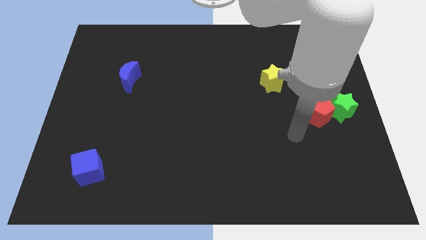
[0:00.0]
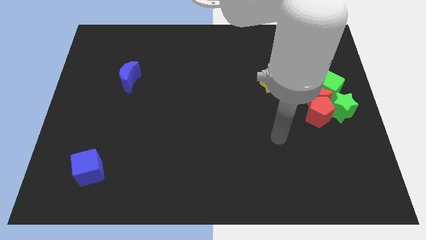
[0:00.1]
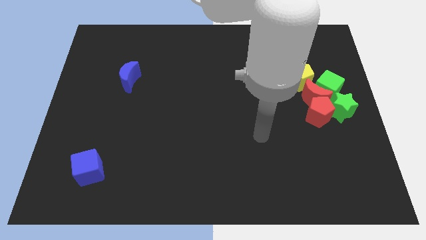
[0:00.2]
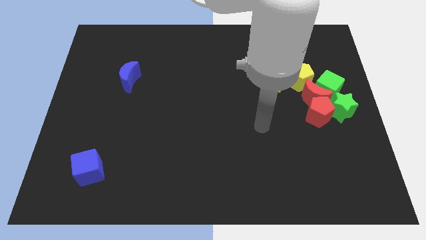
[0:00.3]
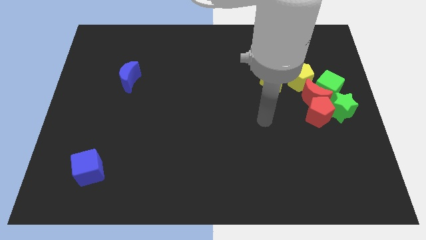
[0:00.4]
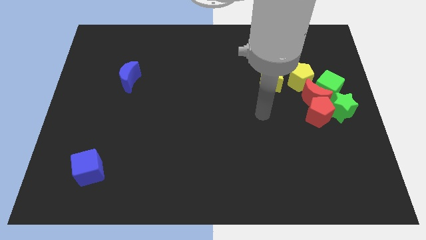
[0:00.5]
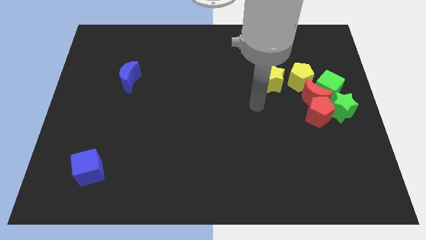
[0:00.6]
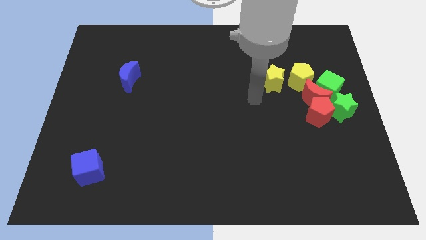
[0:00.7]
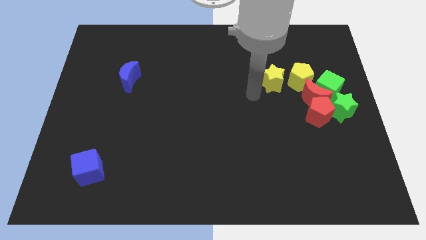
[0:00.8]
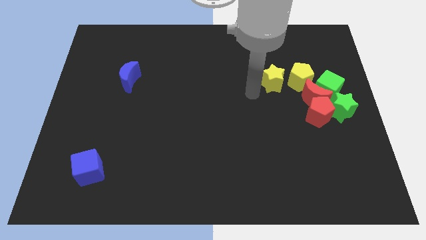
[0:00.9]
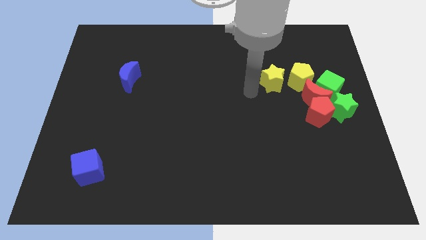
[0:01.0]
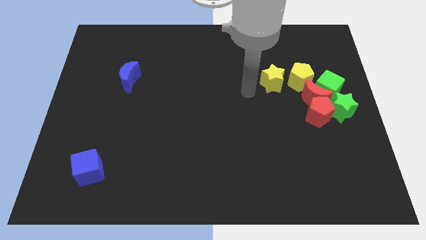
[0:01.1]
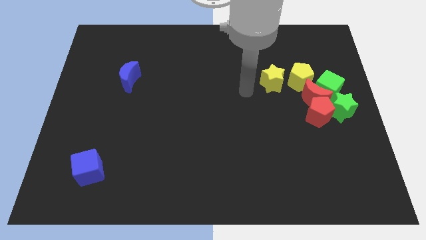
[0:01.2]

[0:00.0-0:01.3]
move your arm away from red pentagon

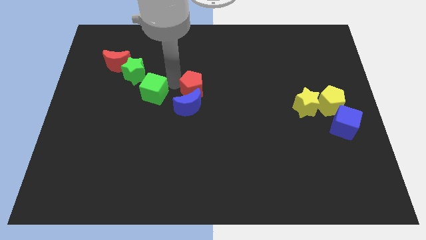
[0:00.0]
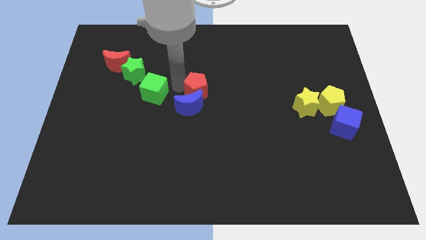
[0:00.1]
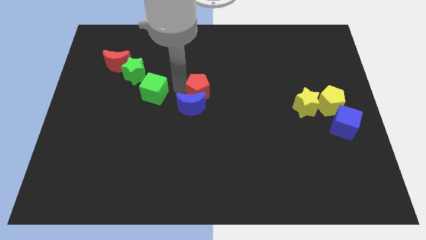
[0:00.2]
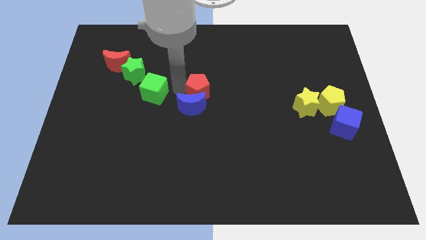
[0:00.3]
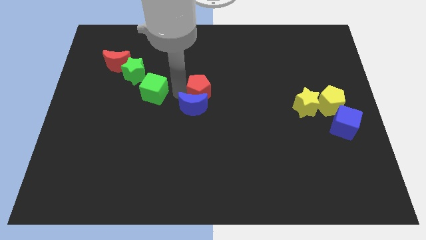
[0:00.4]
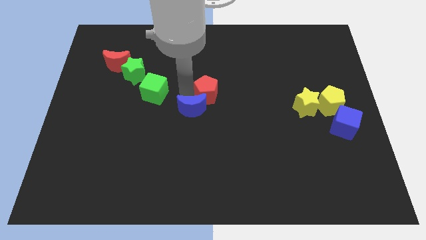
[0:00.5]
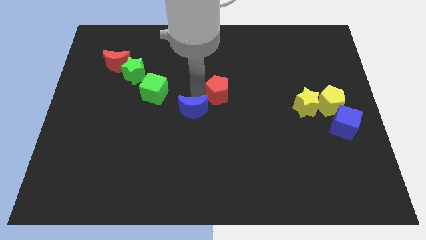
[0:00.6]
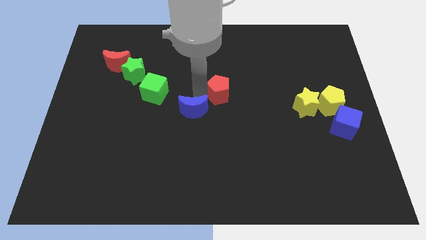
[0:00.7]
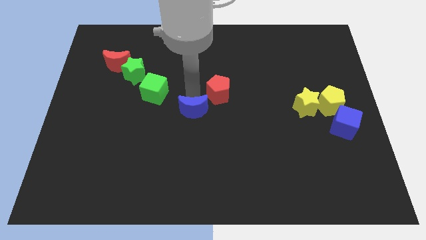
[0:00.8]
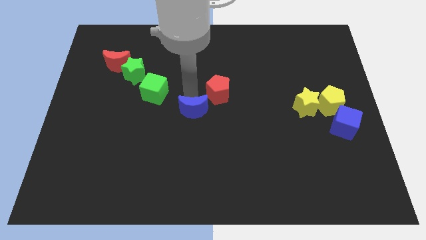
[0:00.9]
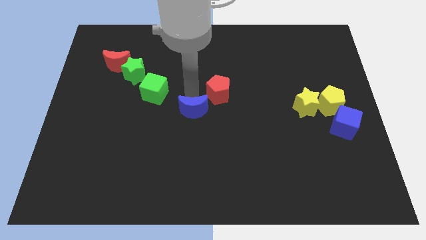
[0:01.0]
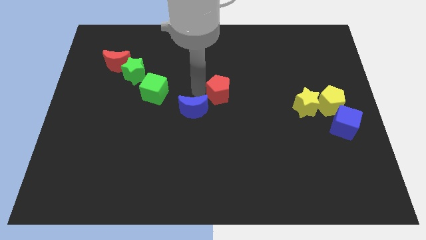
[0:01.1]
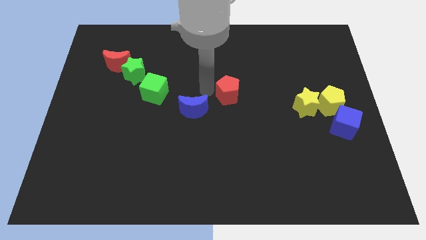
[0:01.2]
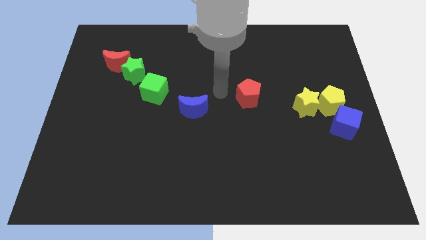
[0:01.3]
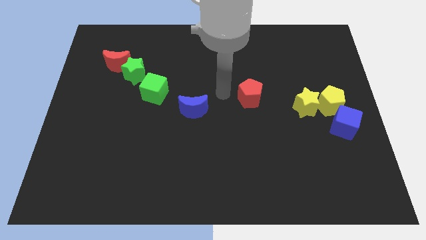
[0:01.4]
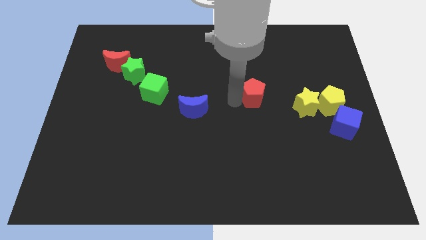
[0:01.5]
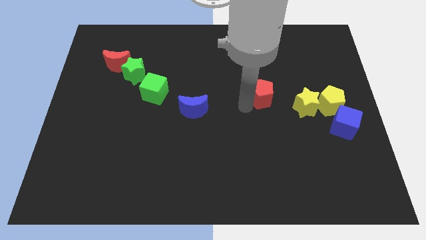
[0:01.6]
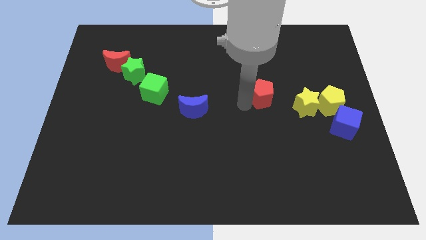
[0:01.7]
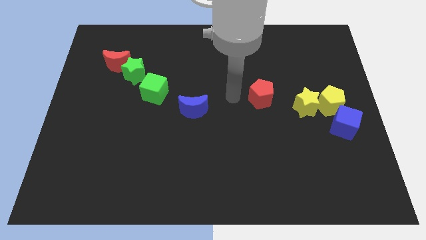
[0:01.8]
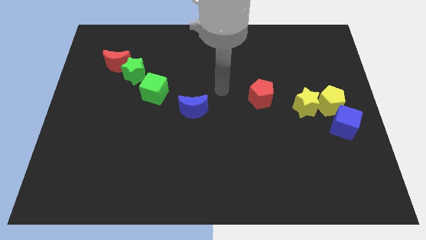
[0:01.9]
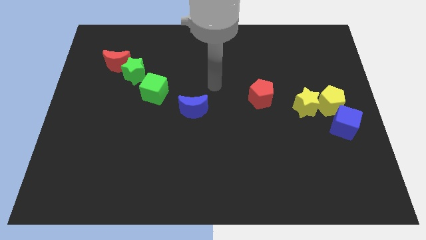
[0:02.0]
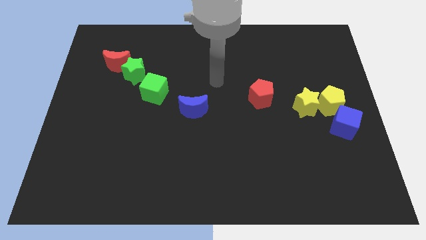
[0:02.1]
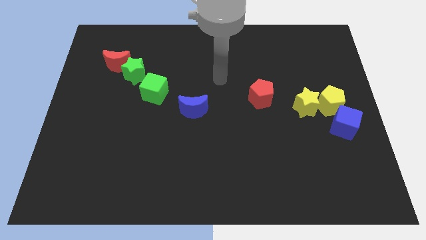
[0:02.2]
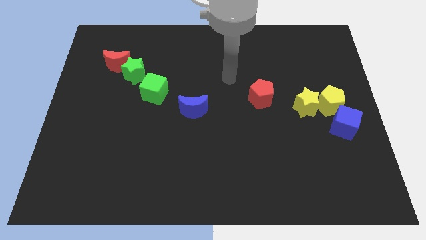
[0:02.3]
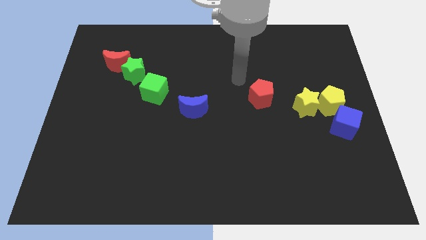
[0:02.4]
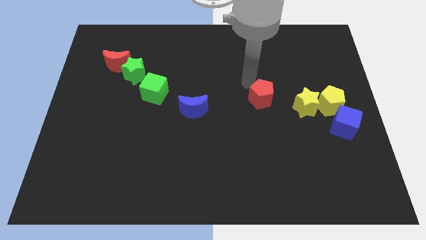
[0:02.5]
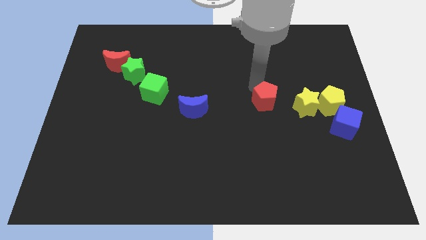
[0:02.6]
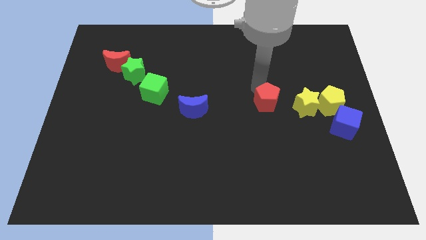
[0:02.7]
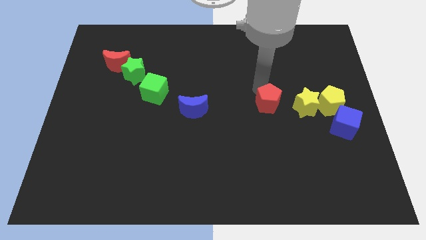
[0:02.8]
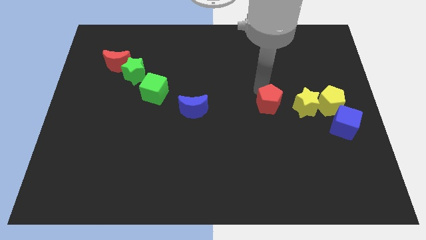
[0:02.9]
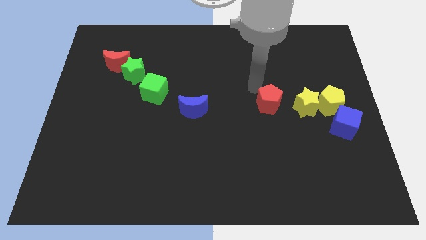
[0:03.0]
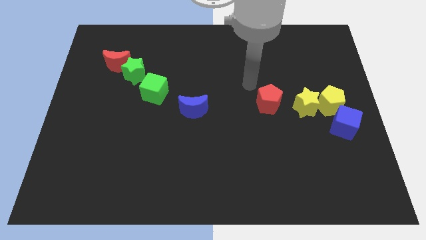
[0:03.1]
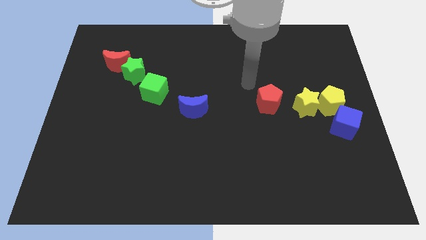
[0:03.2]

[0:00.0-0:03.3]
separate red pentagon from blue crescent

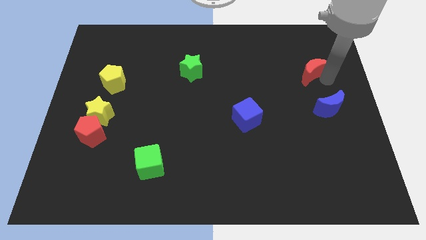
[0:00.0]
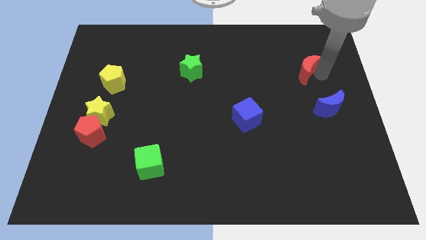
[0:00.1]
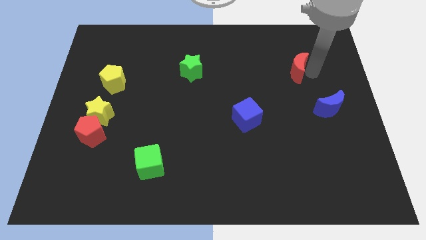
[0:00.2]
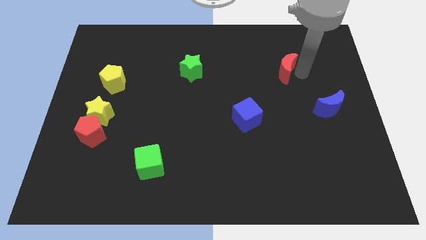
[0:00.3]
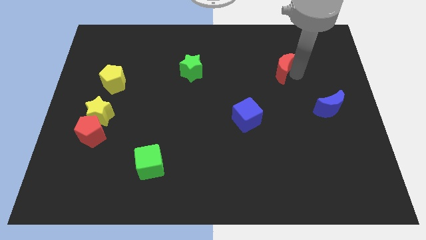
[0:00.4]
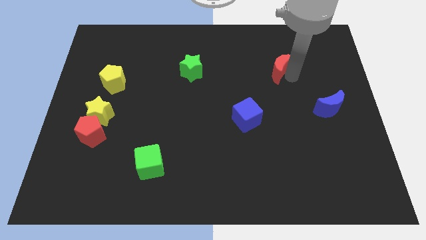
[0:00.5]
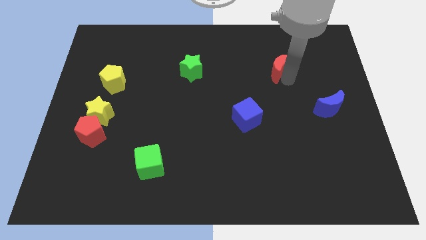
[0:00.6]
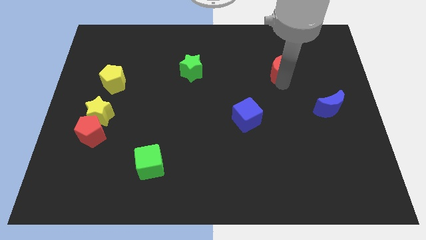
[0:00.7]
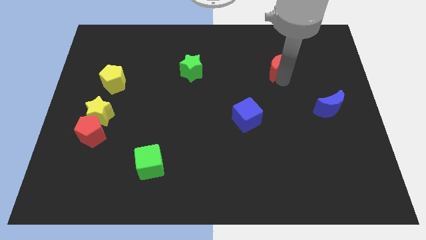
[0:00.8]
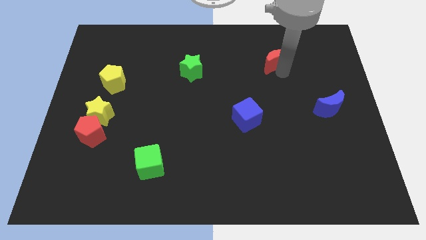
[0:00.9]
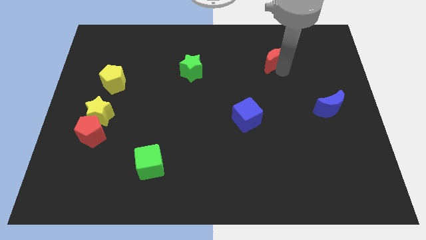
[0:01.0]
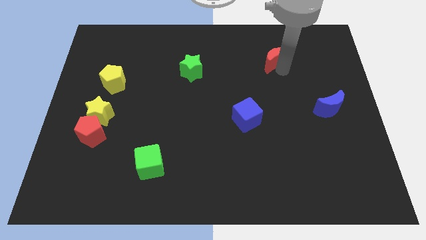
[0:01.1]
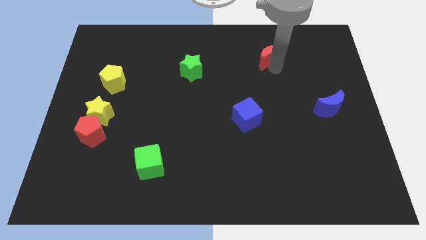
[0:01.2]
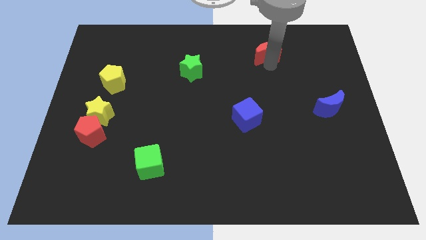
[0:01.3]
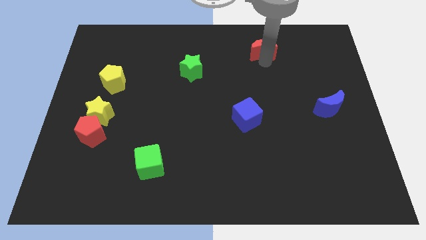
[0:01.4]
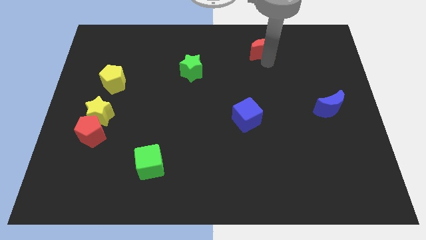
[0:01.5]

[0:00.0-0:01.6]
drag the red moon slightly upwards

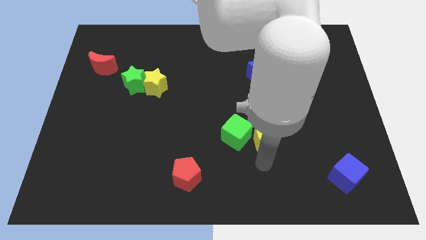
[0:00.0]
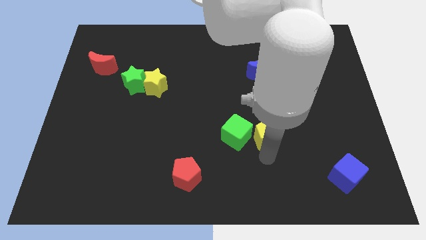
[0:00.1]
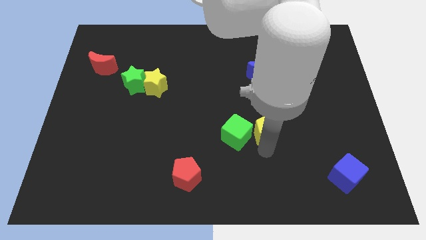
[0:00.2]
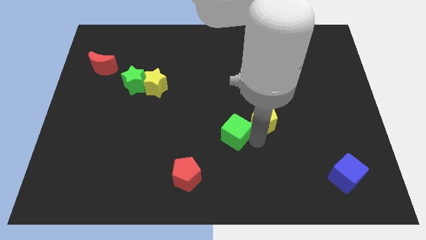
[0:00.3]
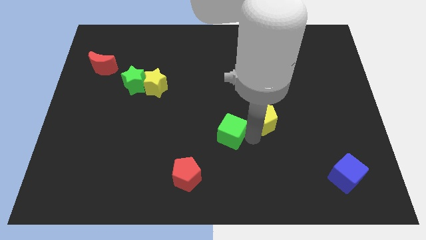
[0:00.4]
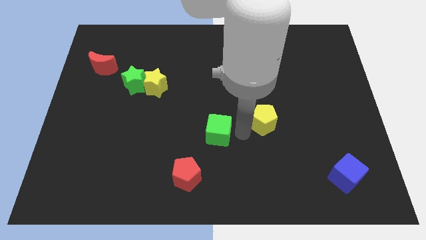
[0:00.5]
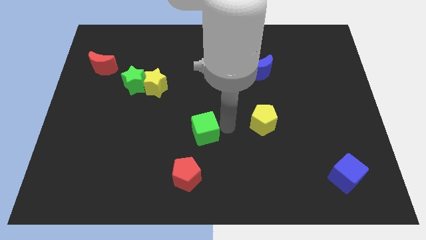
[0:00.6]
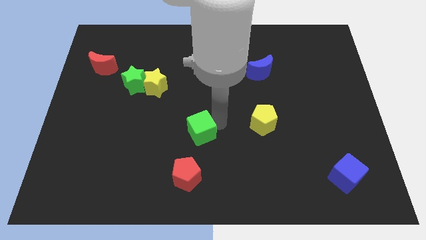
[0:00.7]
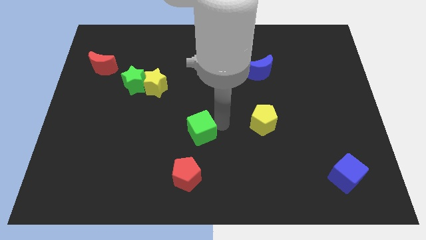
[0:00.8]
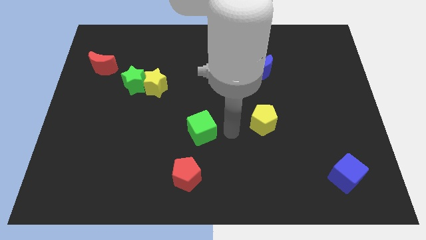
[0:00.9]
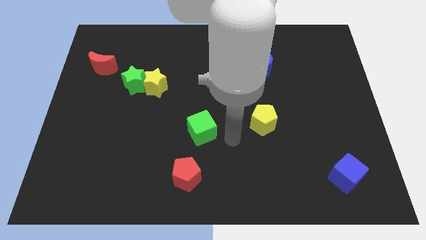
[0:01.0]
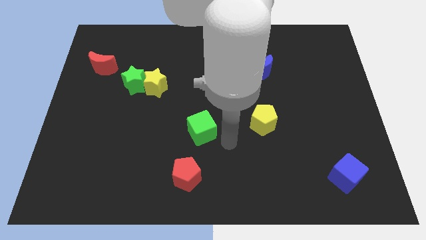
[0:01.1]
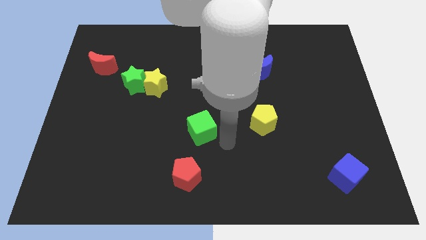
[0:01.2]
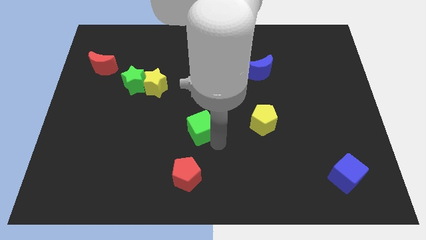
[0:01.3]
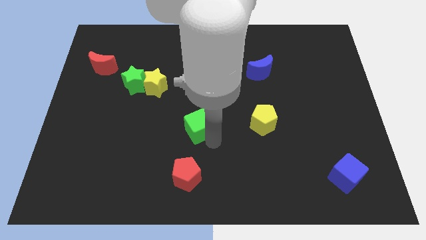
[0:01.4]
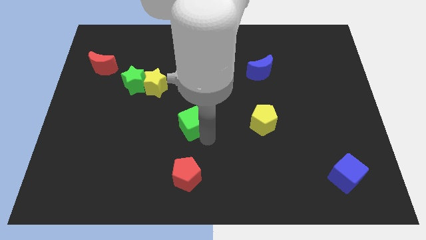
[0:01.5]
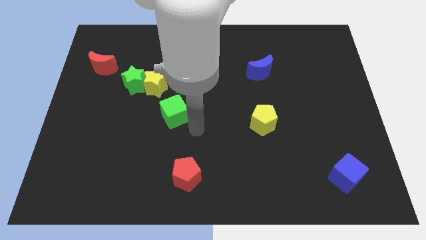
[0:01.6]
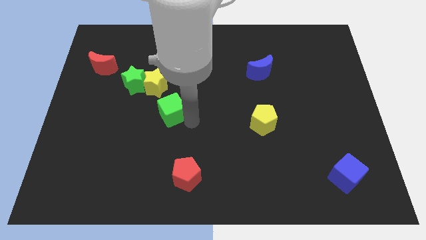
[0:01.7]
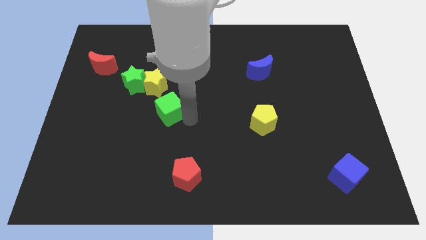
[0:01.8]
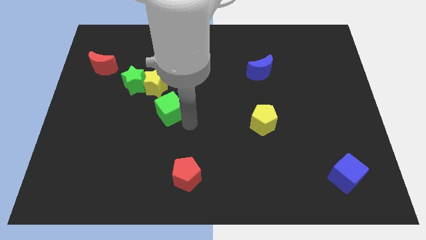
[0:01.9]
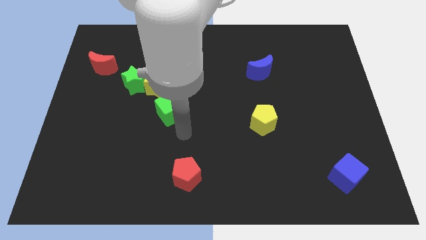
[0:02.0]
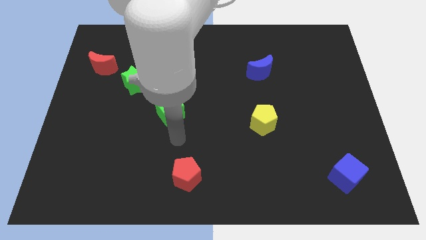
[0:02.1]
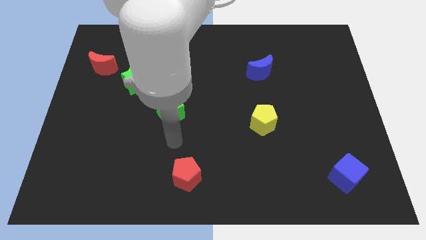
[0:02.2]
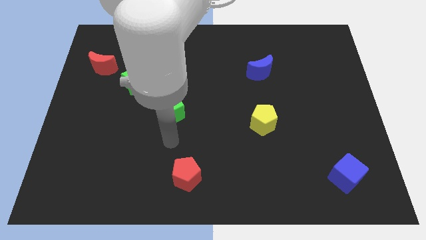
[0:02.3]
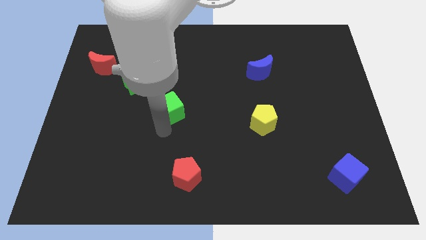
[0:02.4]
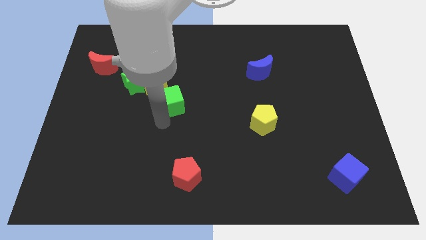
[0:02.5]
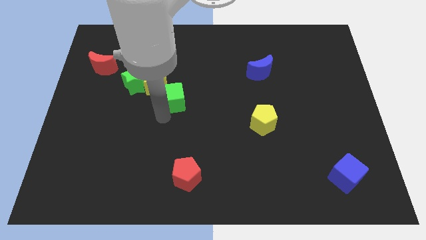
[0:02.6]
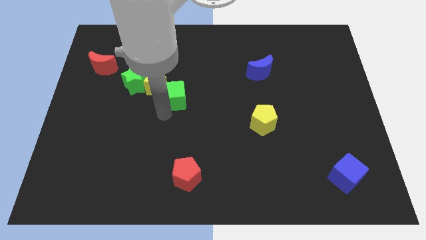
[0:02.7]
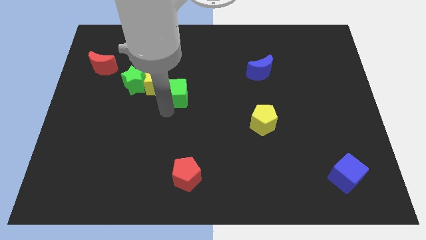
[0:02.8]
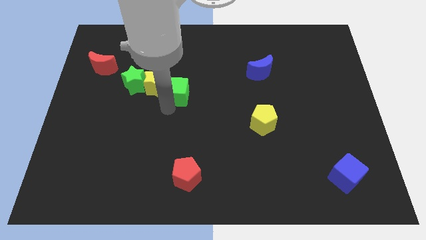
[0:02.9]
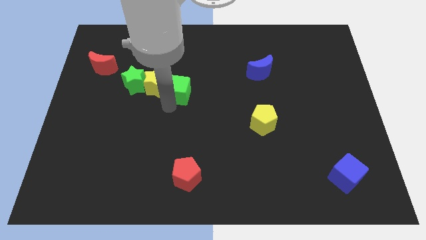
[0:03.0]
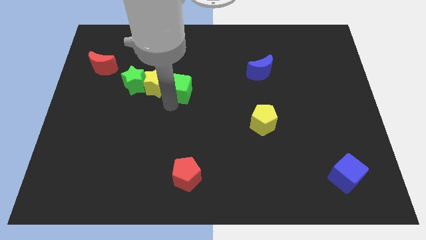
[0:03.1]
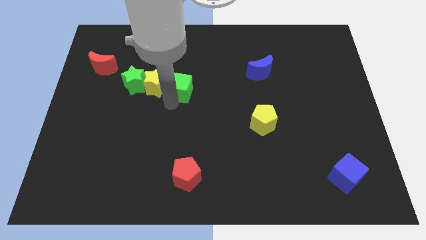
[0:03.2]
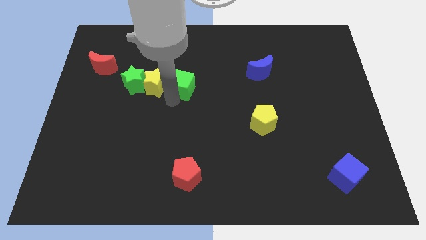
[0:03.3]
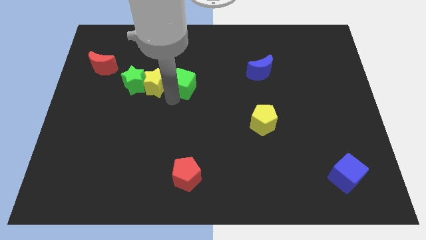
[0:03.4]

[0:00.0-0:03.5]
separate green cube from yellow pentagon
